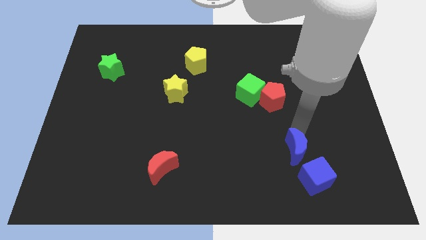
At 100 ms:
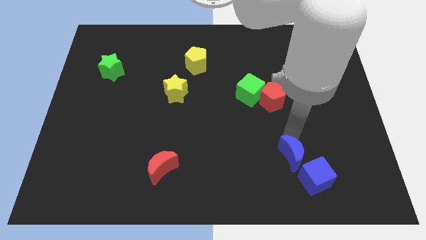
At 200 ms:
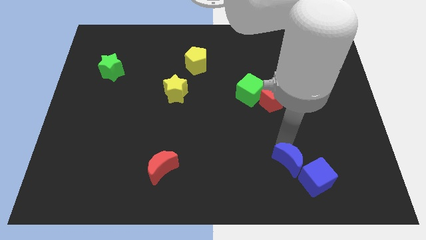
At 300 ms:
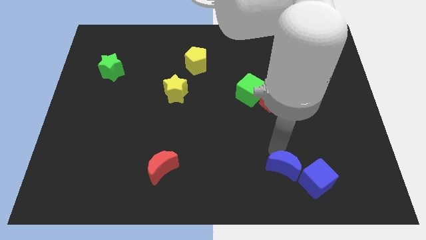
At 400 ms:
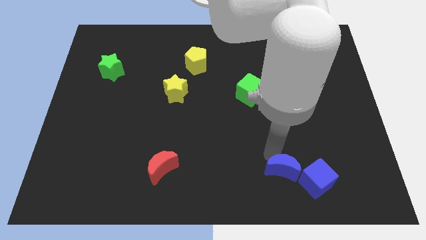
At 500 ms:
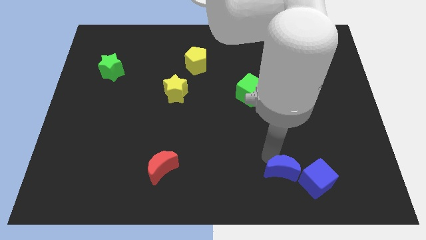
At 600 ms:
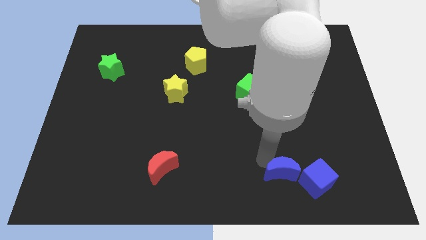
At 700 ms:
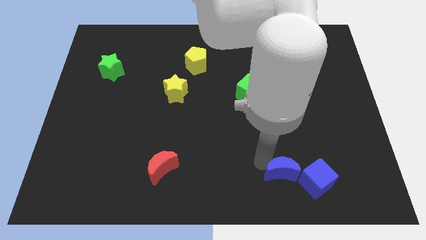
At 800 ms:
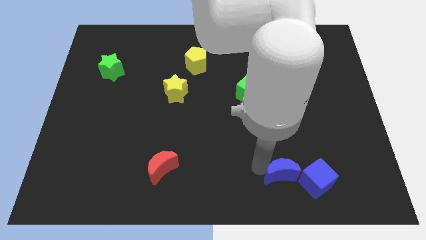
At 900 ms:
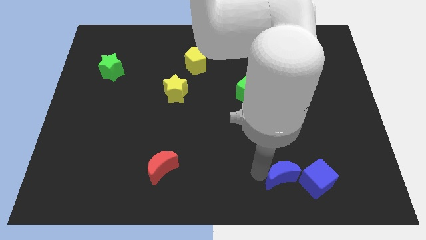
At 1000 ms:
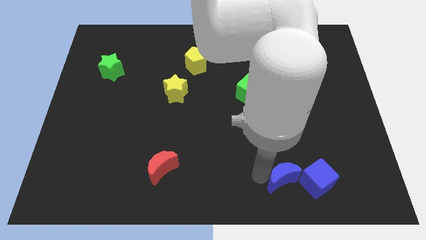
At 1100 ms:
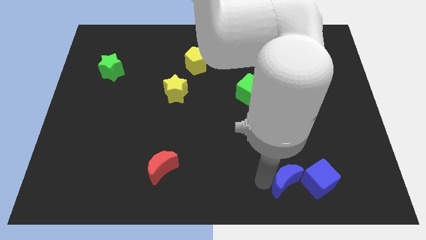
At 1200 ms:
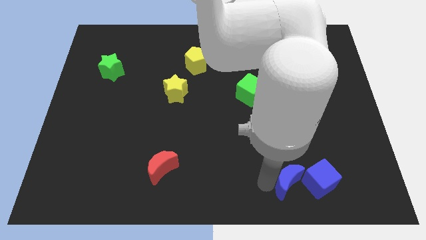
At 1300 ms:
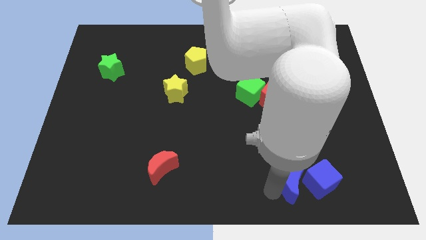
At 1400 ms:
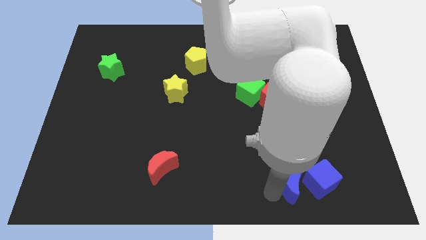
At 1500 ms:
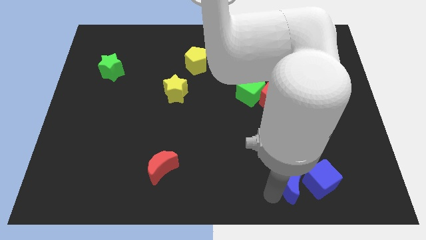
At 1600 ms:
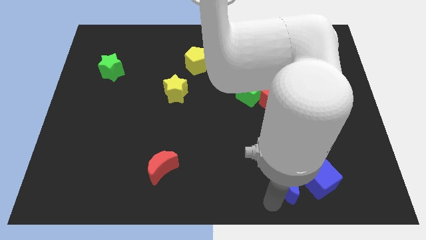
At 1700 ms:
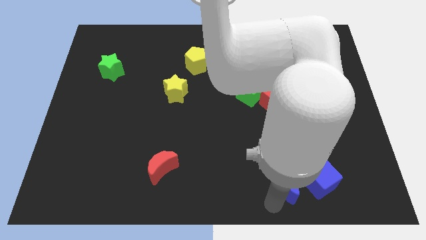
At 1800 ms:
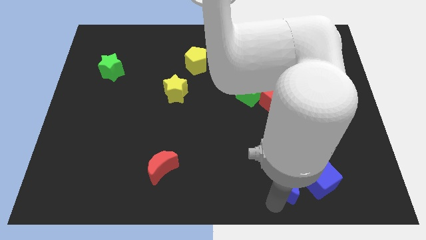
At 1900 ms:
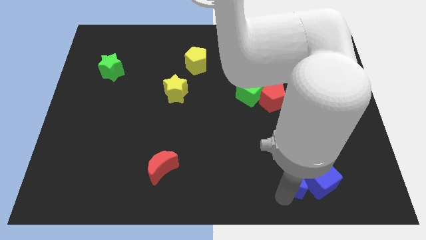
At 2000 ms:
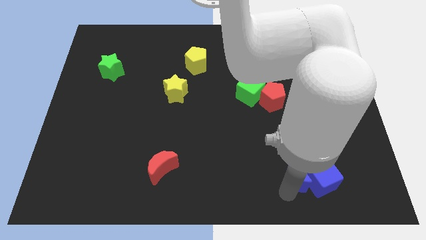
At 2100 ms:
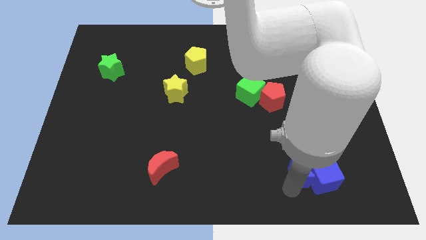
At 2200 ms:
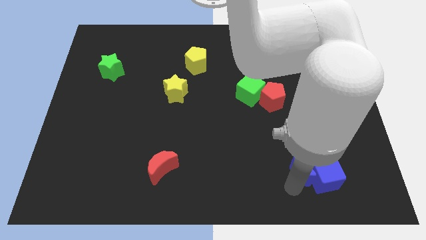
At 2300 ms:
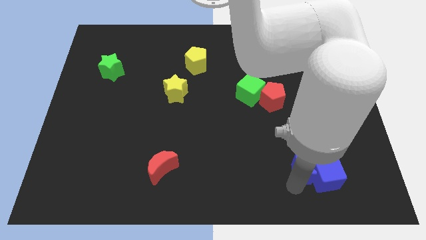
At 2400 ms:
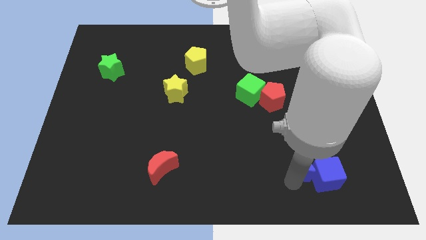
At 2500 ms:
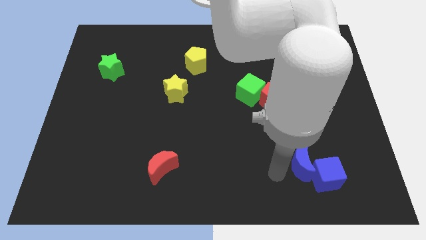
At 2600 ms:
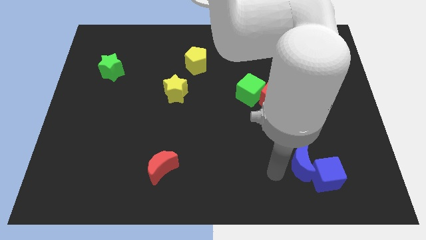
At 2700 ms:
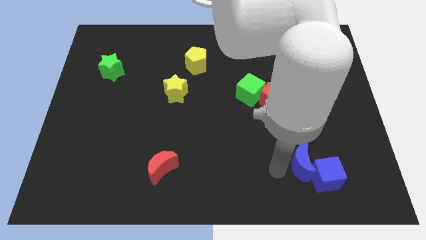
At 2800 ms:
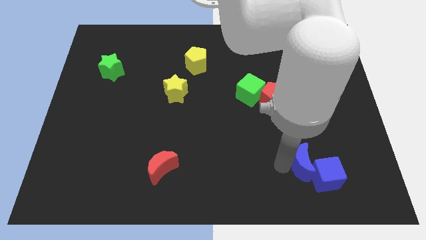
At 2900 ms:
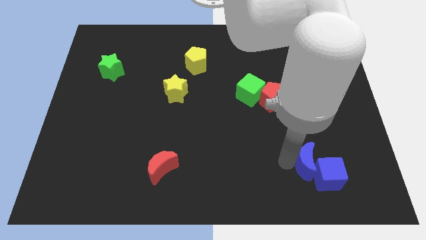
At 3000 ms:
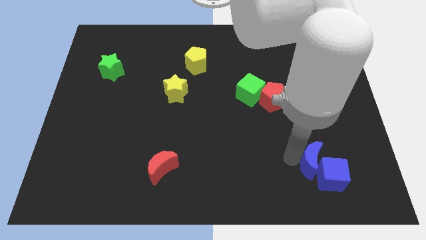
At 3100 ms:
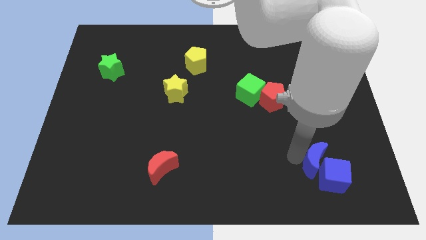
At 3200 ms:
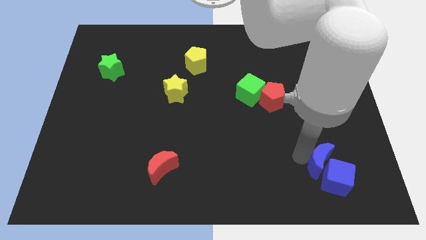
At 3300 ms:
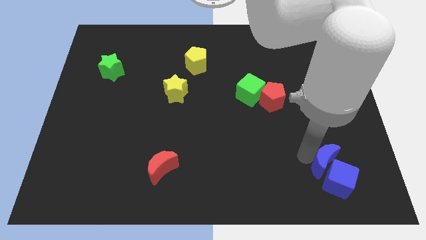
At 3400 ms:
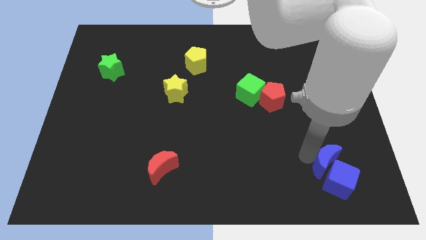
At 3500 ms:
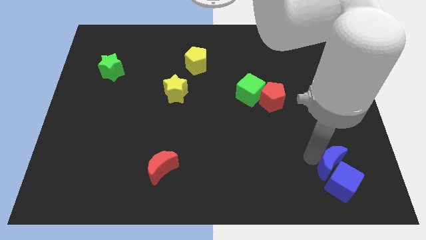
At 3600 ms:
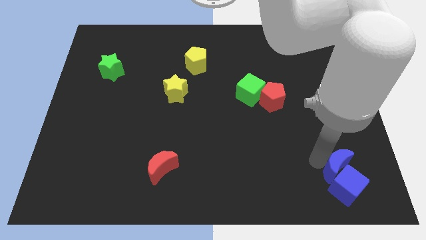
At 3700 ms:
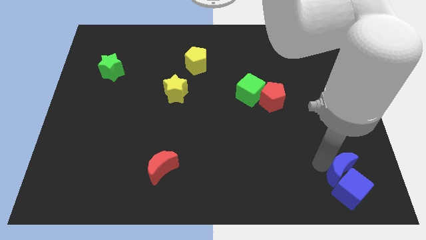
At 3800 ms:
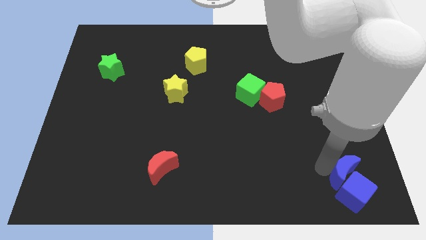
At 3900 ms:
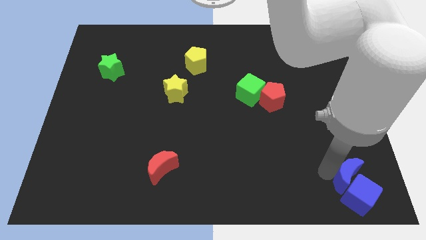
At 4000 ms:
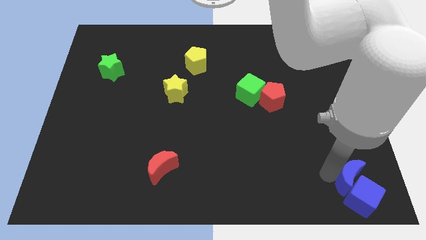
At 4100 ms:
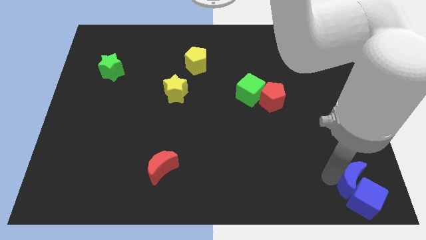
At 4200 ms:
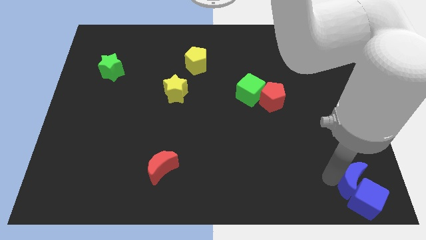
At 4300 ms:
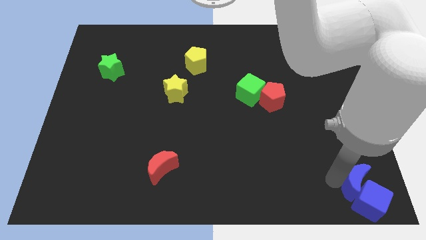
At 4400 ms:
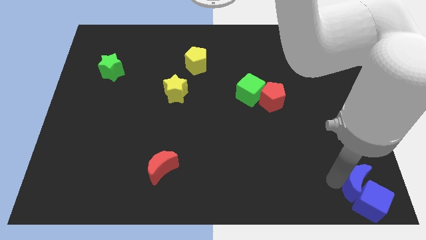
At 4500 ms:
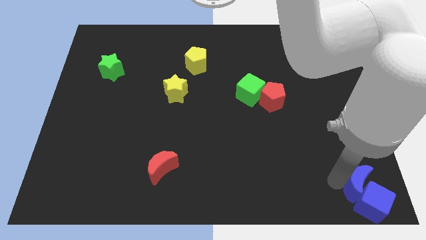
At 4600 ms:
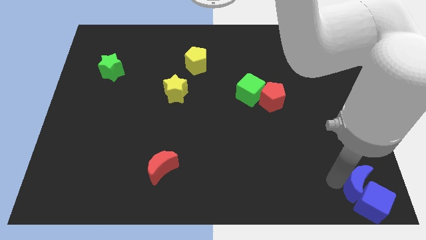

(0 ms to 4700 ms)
push the blue moon and blue cube to the bottom right corner of the board

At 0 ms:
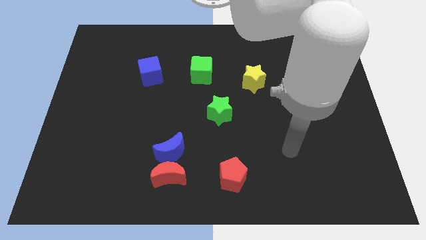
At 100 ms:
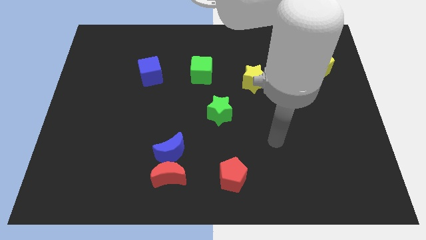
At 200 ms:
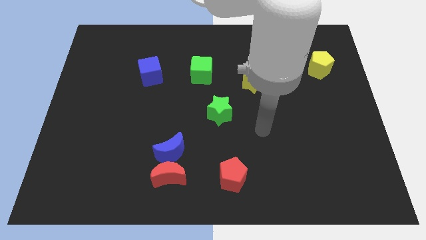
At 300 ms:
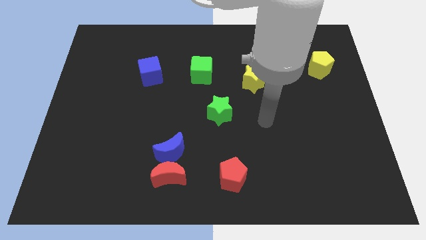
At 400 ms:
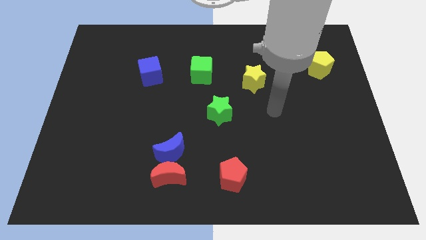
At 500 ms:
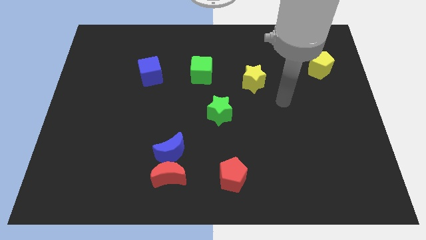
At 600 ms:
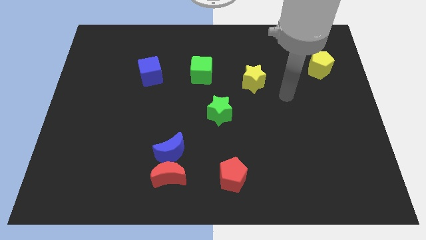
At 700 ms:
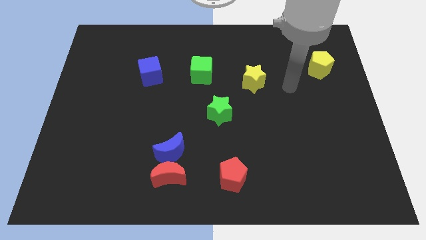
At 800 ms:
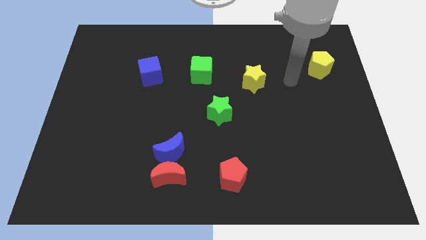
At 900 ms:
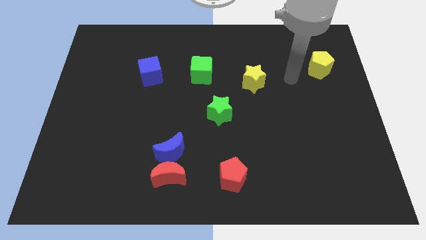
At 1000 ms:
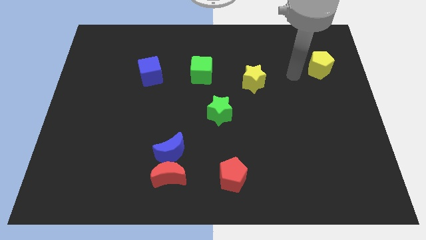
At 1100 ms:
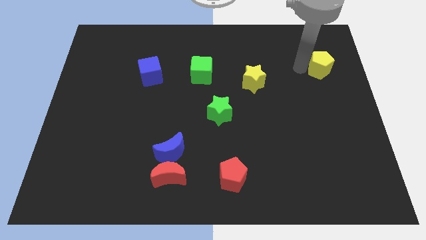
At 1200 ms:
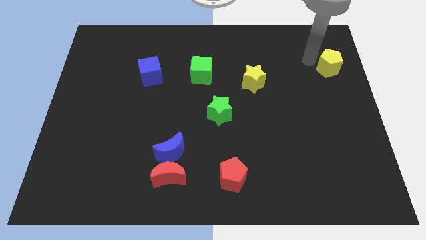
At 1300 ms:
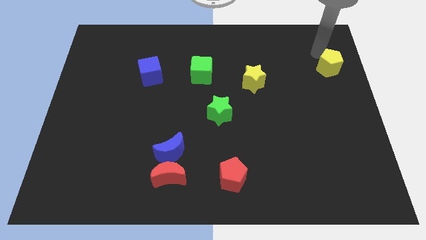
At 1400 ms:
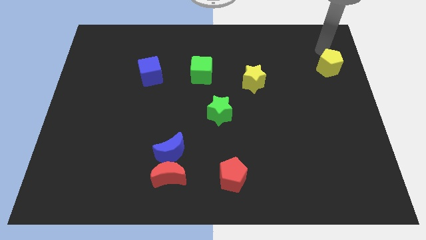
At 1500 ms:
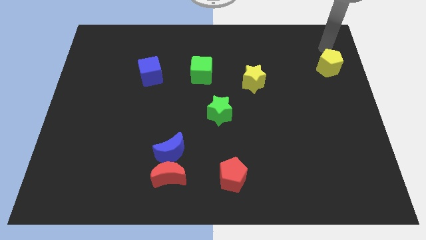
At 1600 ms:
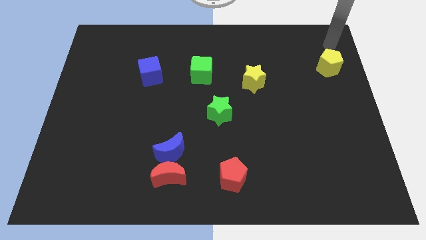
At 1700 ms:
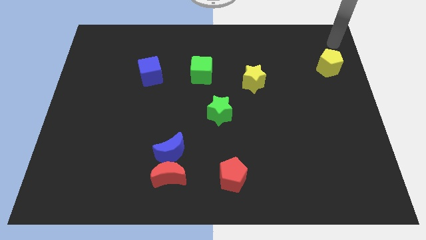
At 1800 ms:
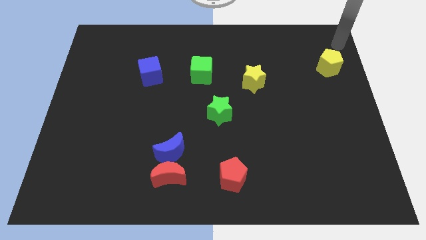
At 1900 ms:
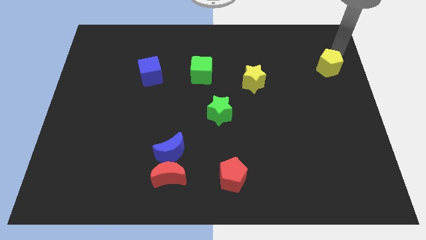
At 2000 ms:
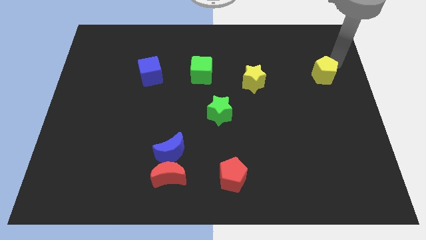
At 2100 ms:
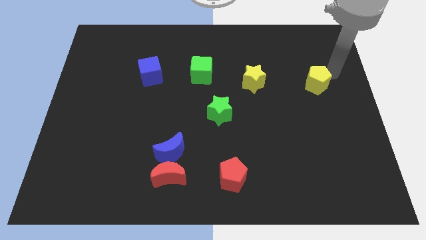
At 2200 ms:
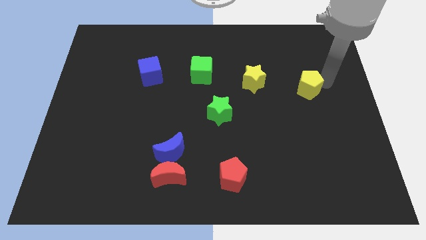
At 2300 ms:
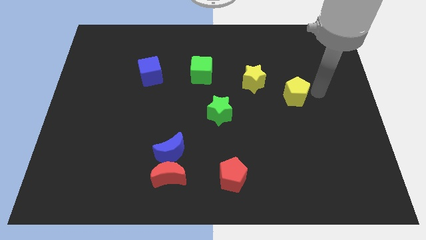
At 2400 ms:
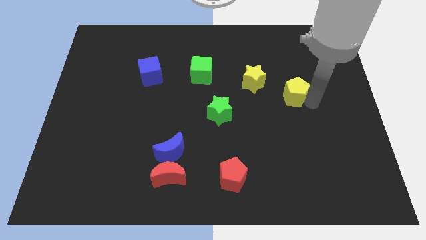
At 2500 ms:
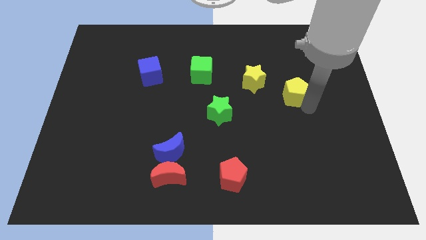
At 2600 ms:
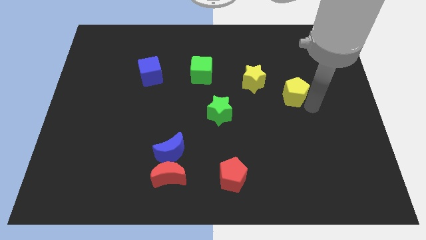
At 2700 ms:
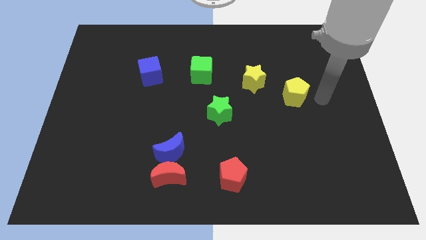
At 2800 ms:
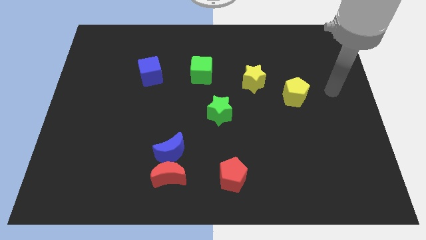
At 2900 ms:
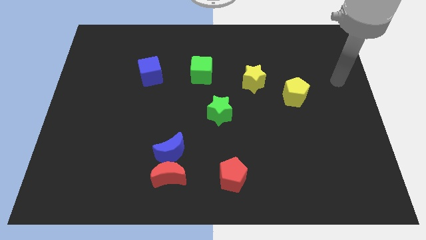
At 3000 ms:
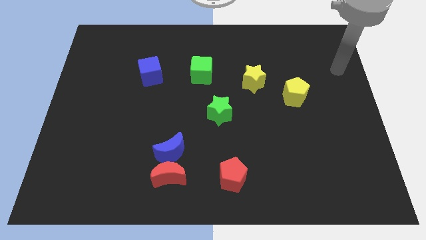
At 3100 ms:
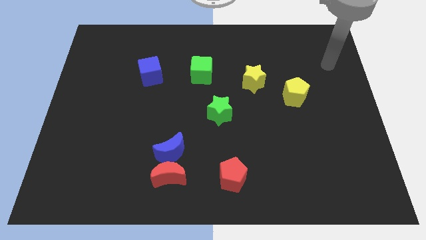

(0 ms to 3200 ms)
place yellow pentagon to the bottom right of yellow star

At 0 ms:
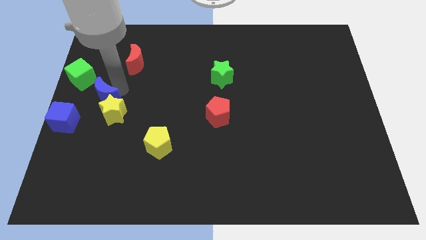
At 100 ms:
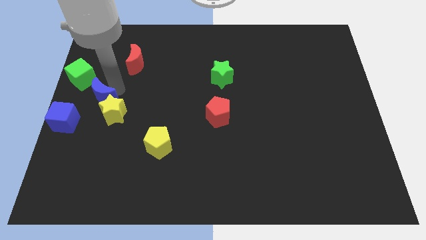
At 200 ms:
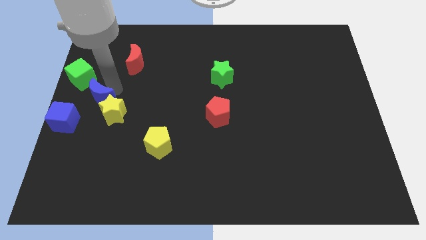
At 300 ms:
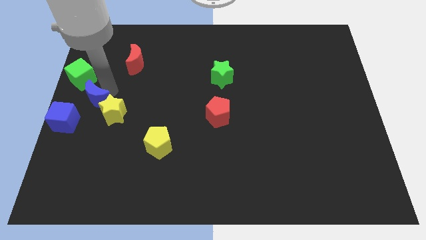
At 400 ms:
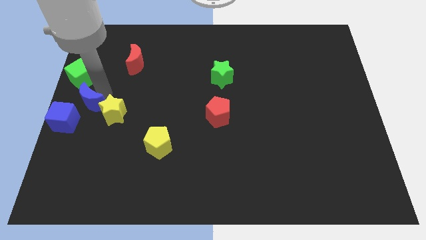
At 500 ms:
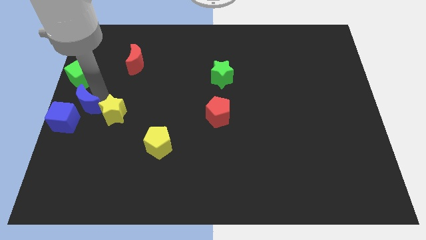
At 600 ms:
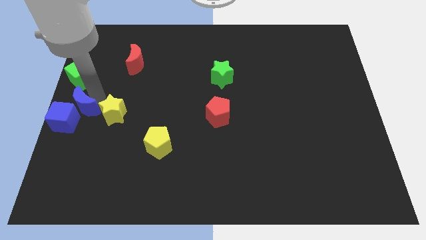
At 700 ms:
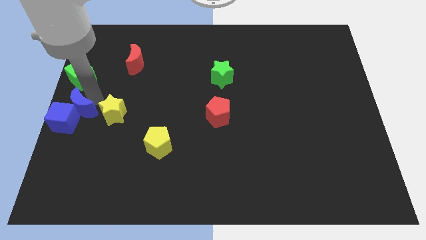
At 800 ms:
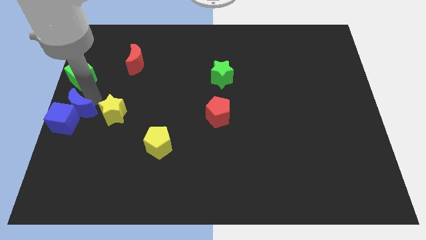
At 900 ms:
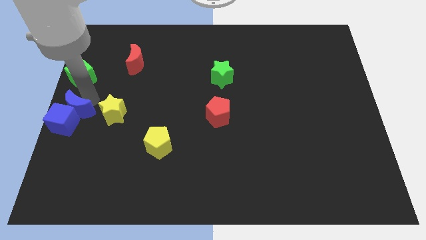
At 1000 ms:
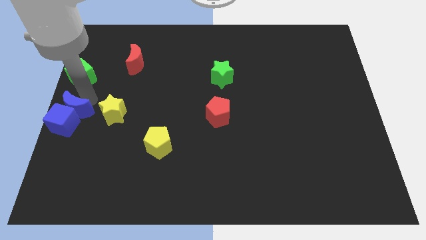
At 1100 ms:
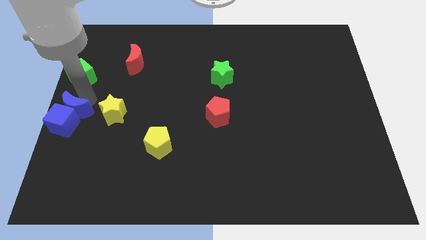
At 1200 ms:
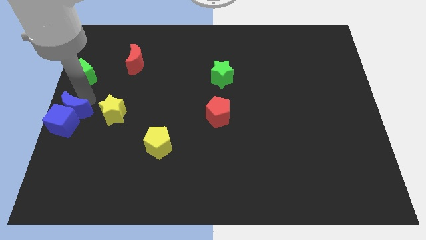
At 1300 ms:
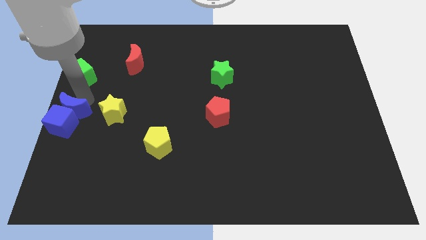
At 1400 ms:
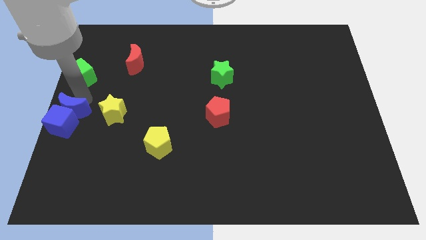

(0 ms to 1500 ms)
put the blue moon into the blue cube
